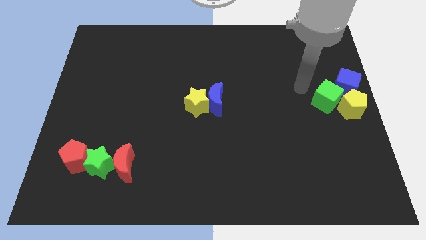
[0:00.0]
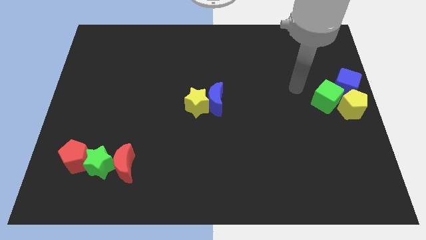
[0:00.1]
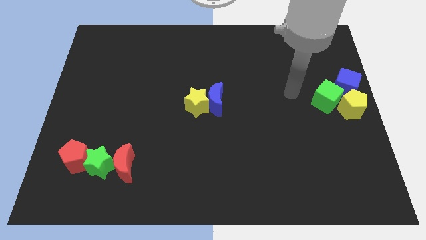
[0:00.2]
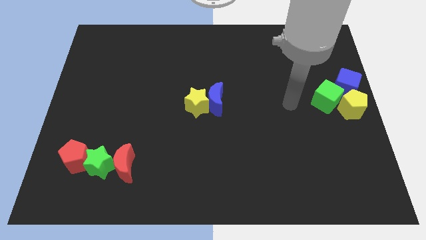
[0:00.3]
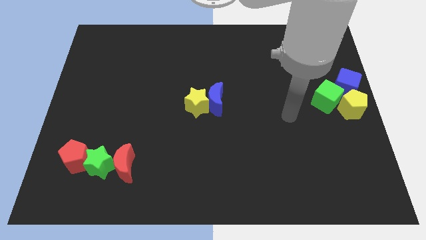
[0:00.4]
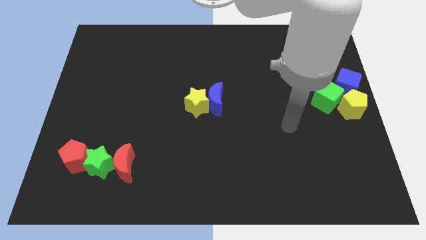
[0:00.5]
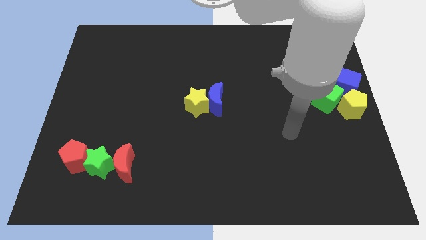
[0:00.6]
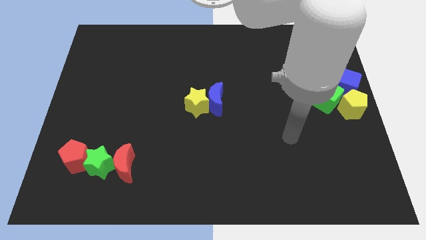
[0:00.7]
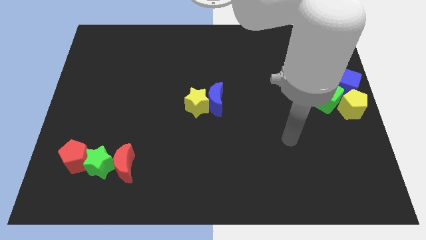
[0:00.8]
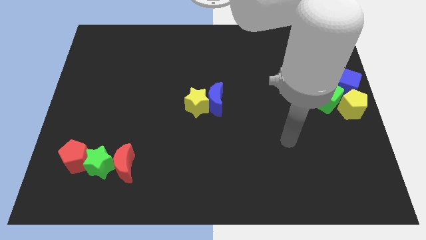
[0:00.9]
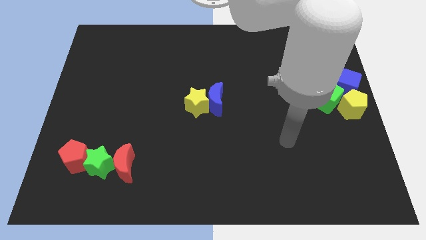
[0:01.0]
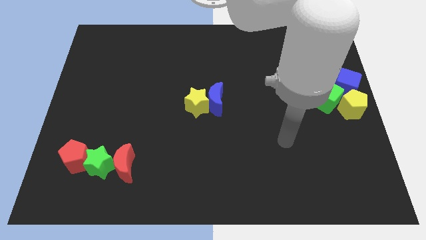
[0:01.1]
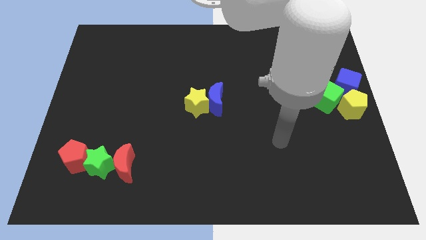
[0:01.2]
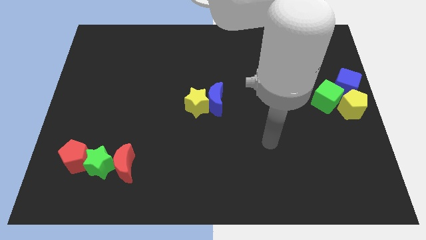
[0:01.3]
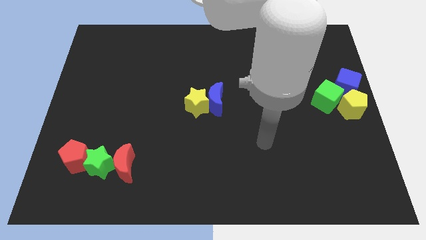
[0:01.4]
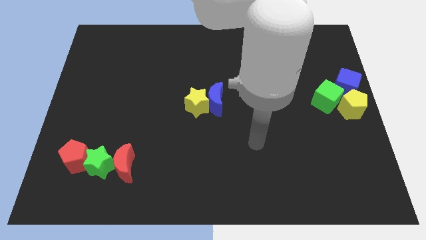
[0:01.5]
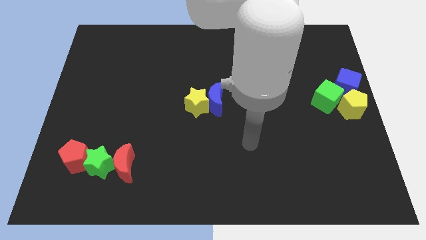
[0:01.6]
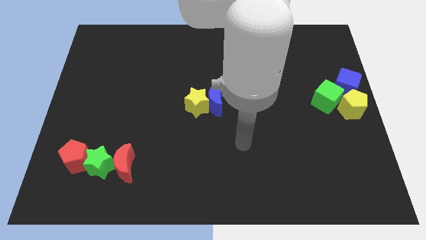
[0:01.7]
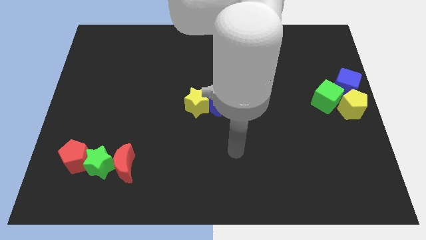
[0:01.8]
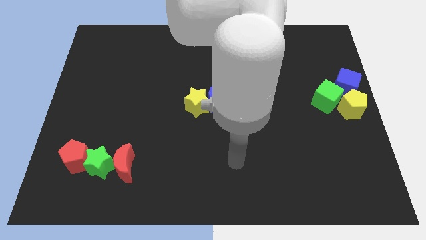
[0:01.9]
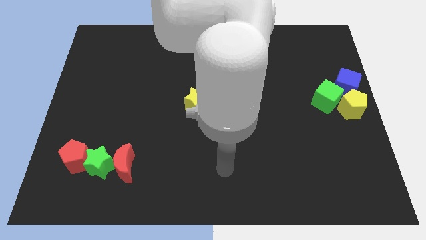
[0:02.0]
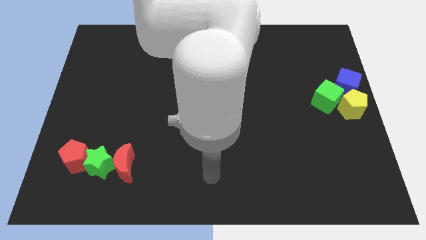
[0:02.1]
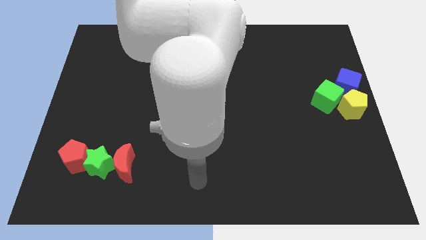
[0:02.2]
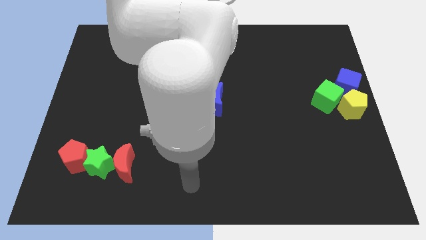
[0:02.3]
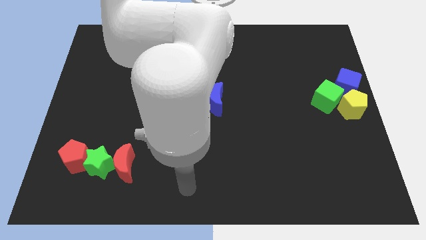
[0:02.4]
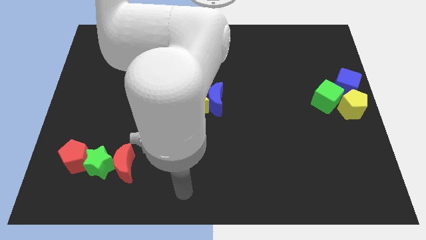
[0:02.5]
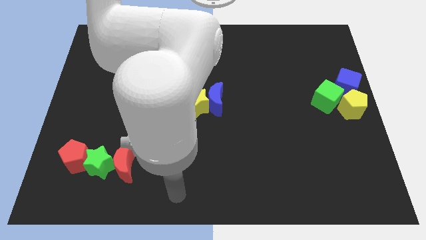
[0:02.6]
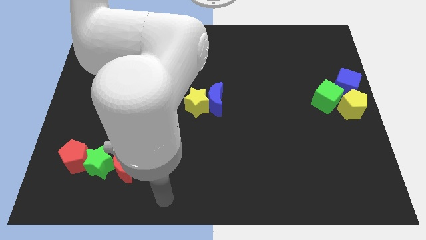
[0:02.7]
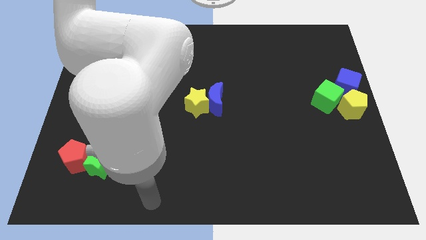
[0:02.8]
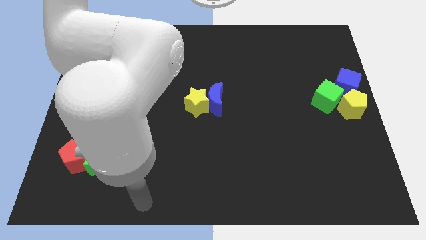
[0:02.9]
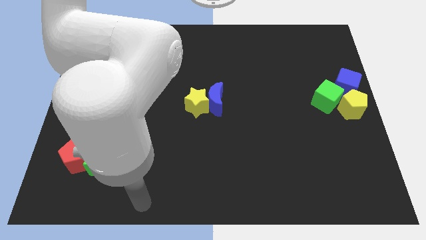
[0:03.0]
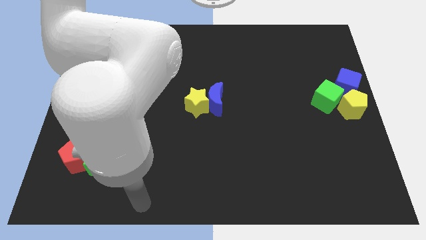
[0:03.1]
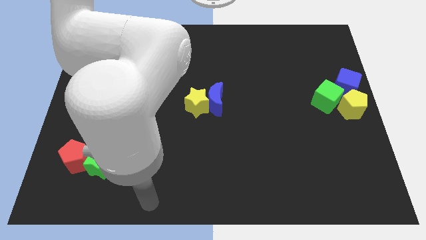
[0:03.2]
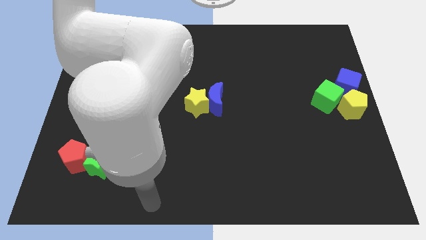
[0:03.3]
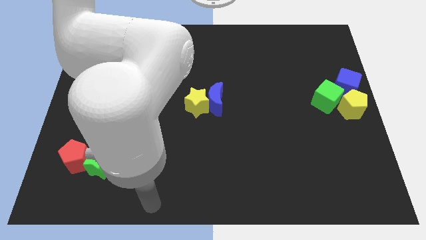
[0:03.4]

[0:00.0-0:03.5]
move arm to the bottom left side of the board

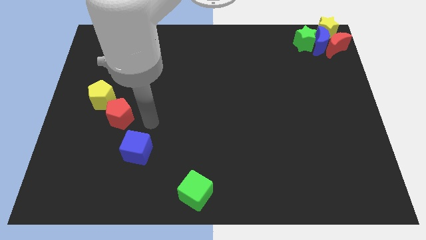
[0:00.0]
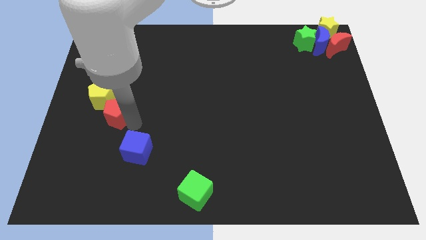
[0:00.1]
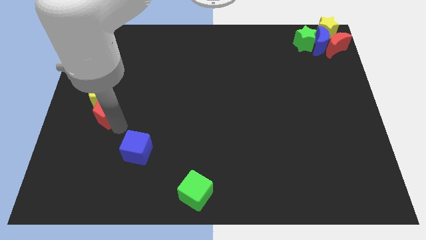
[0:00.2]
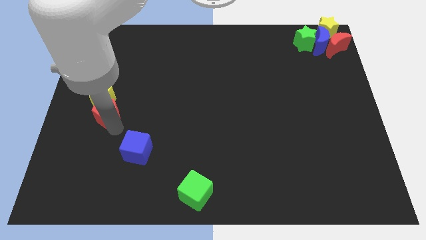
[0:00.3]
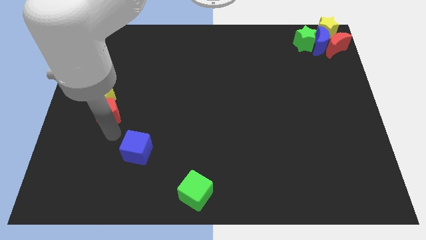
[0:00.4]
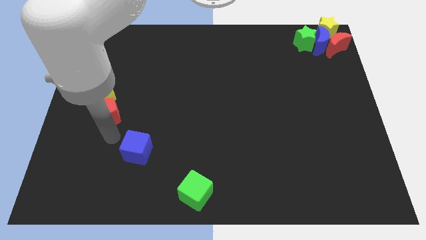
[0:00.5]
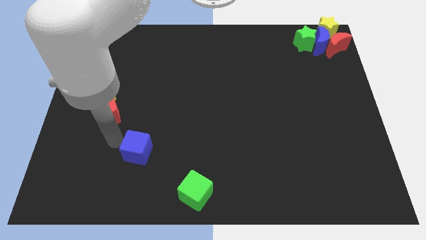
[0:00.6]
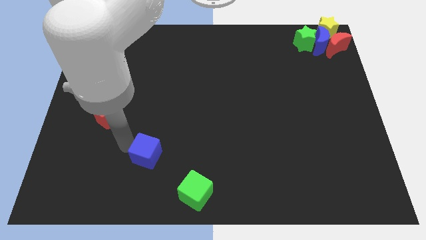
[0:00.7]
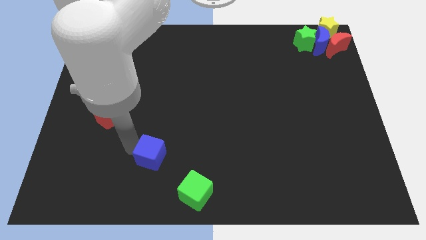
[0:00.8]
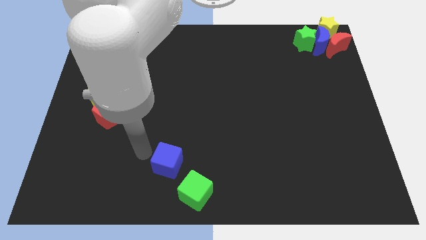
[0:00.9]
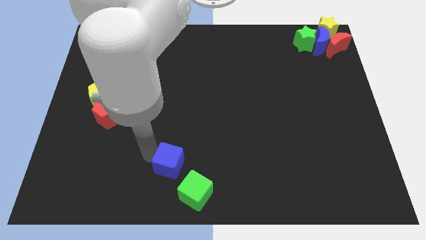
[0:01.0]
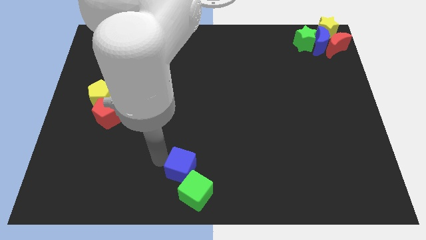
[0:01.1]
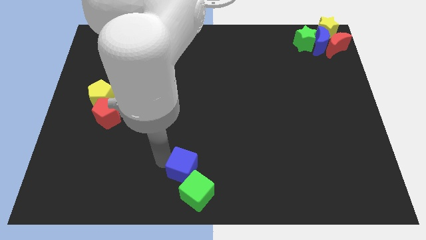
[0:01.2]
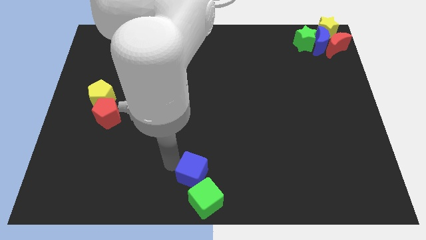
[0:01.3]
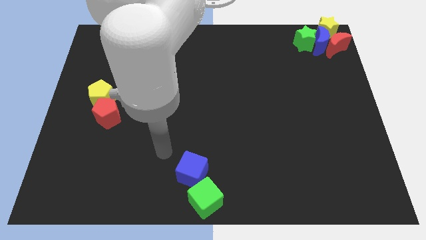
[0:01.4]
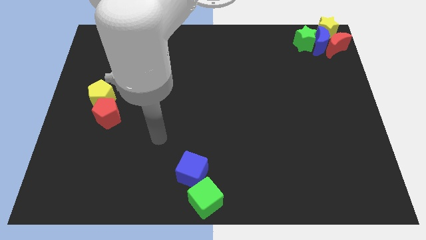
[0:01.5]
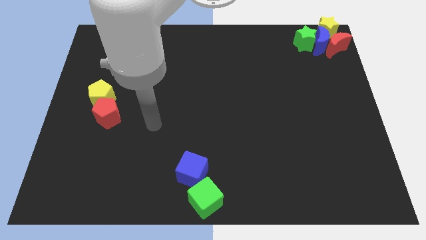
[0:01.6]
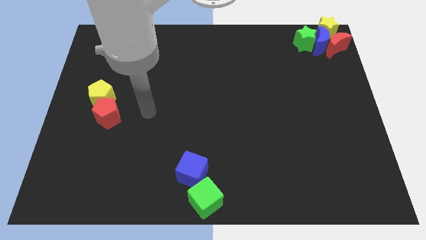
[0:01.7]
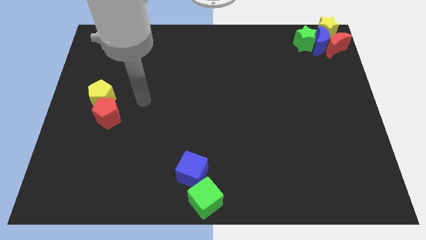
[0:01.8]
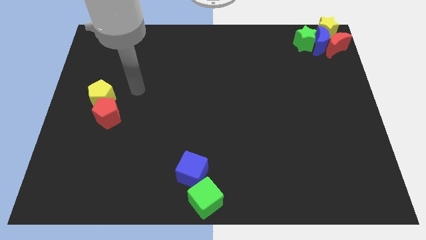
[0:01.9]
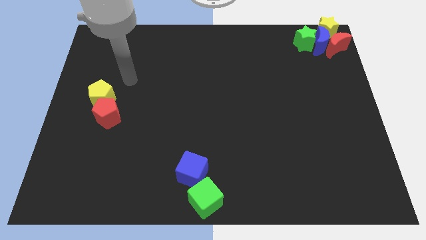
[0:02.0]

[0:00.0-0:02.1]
push the blue cube into the green cube

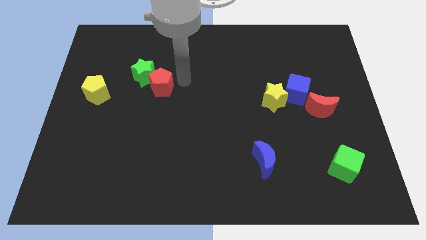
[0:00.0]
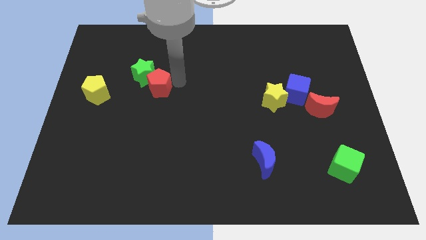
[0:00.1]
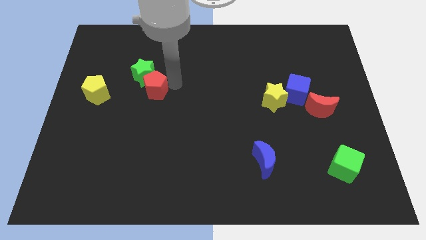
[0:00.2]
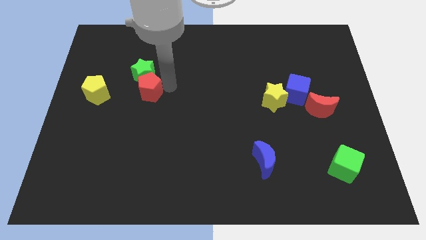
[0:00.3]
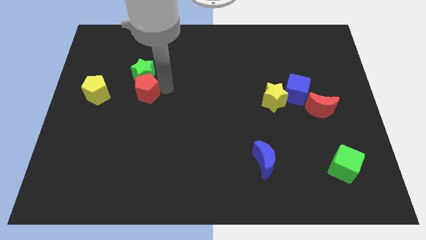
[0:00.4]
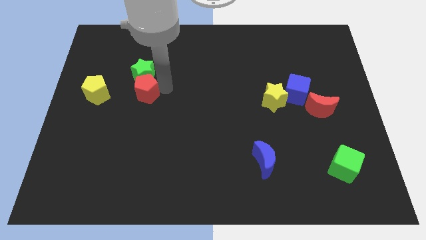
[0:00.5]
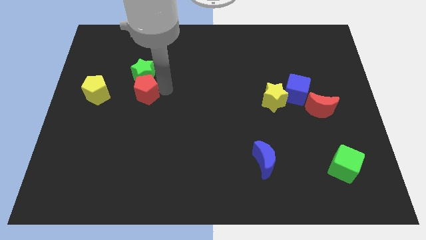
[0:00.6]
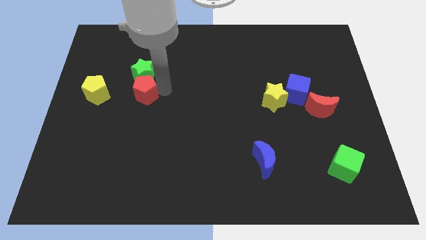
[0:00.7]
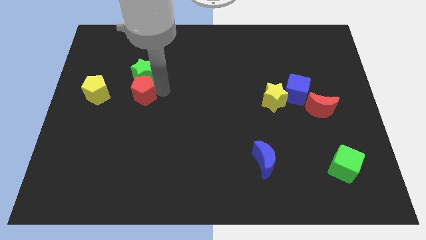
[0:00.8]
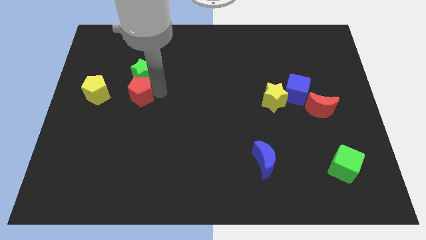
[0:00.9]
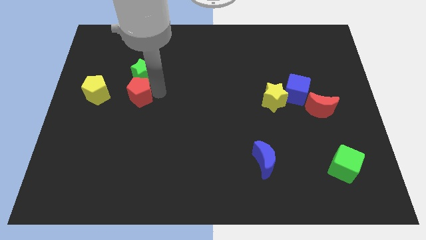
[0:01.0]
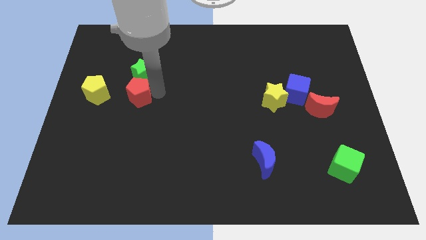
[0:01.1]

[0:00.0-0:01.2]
place the red pentagon below the green star

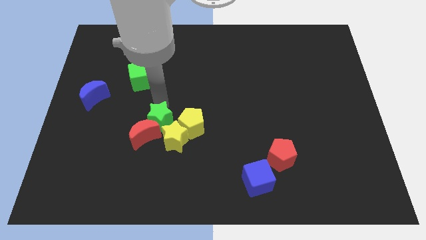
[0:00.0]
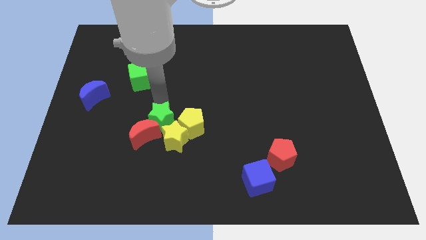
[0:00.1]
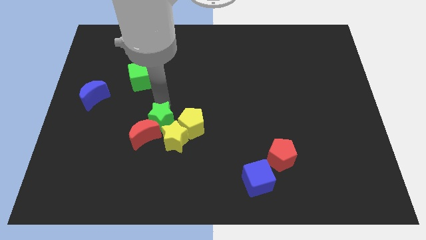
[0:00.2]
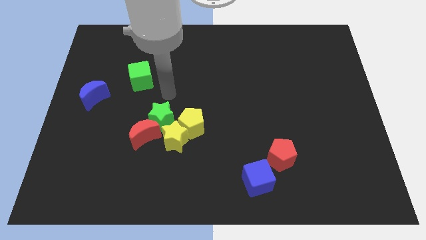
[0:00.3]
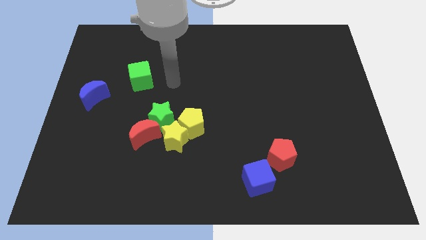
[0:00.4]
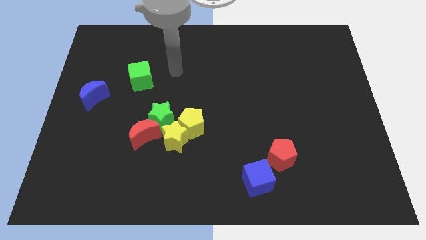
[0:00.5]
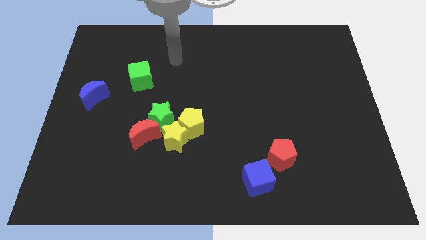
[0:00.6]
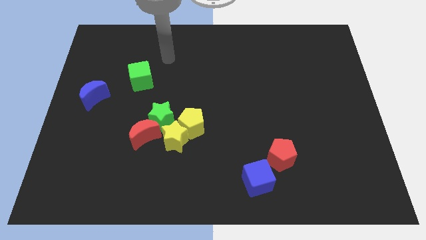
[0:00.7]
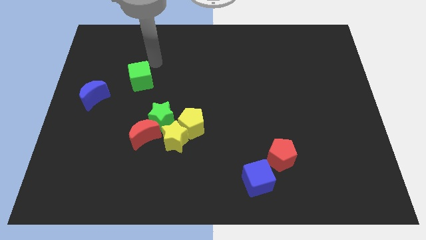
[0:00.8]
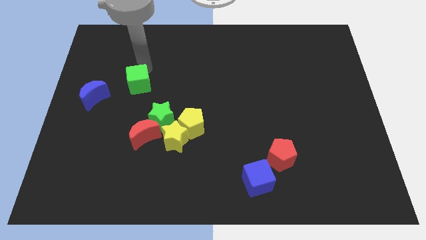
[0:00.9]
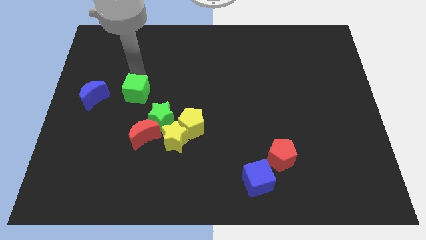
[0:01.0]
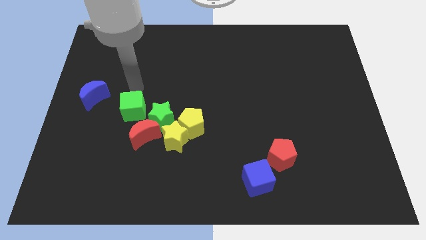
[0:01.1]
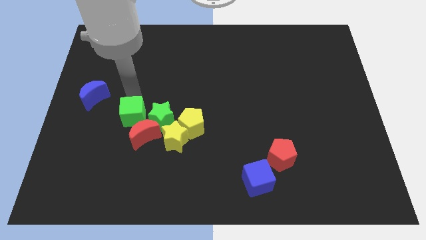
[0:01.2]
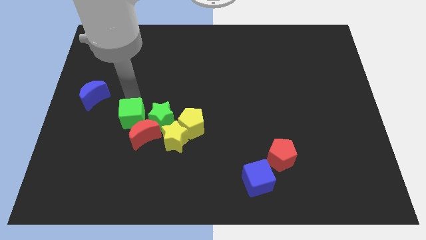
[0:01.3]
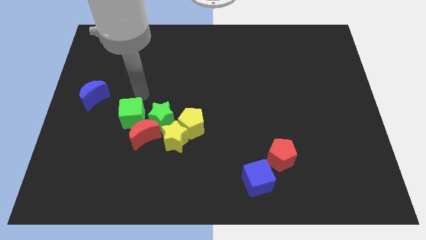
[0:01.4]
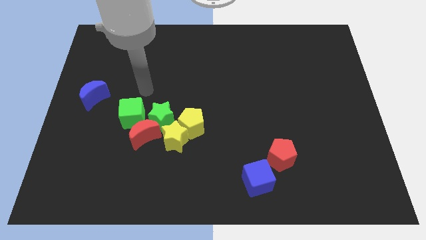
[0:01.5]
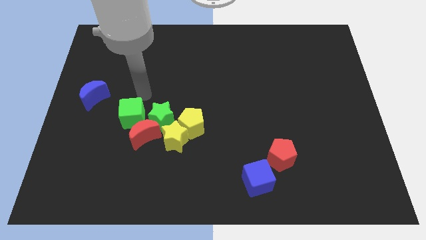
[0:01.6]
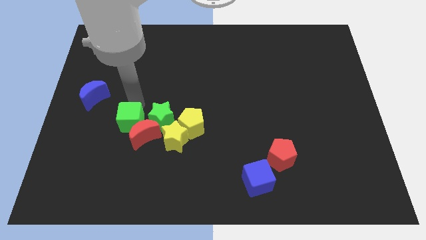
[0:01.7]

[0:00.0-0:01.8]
move the green cube into the red crescent

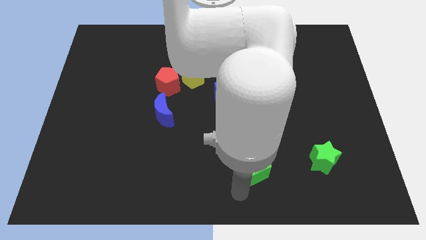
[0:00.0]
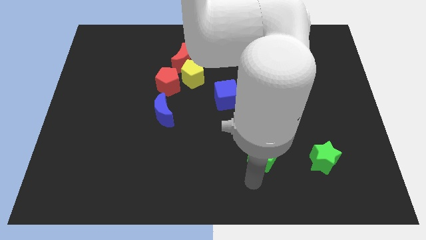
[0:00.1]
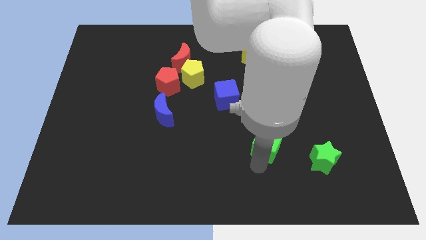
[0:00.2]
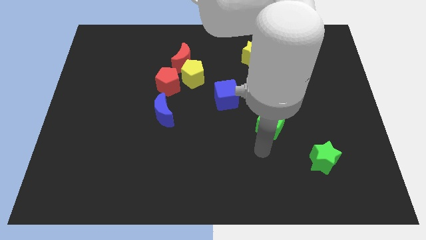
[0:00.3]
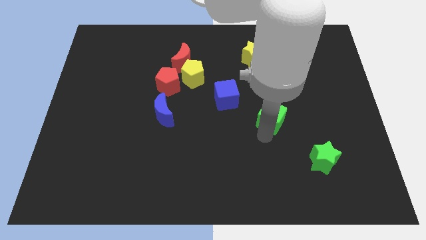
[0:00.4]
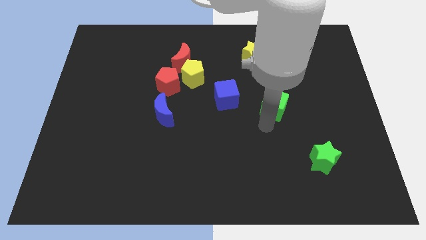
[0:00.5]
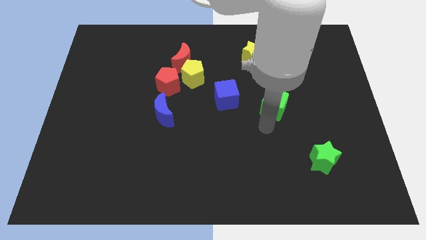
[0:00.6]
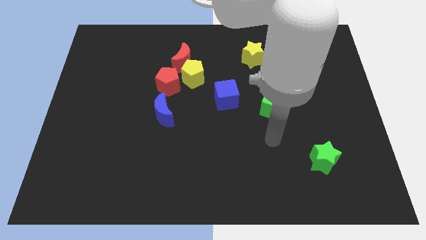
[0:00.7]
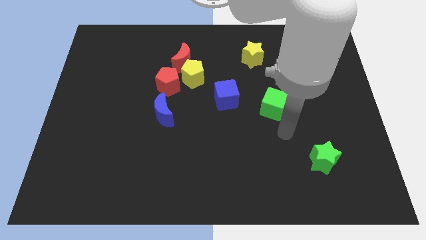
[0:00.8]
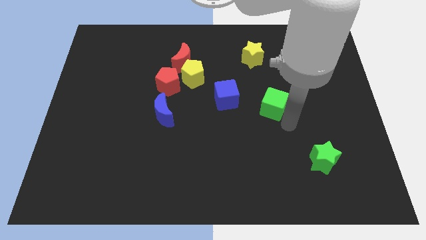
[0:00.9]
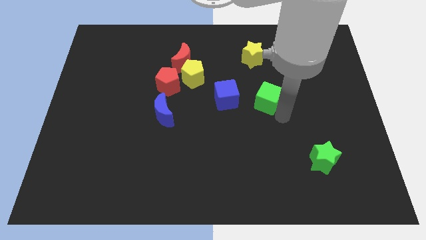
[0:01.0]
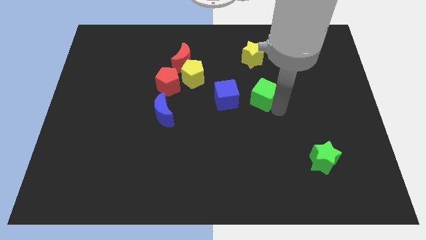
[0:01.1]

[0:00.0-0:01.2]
push the green cube to the right of the blue cube
